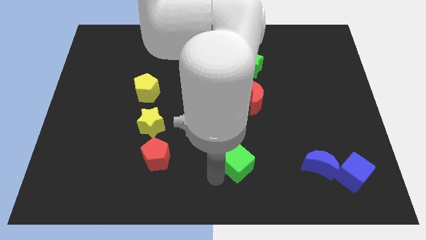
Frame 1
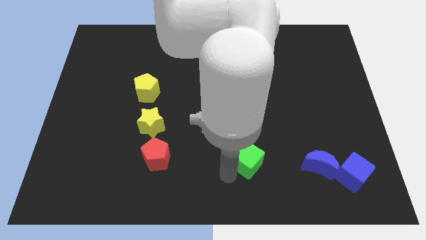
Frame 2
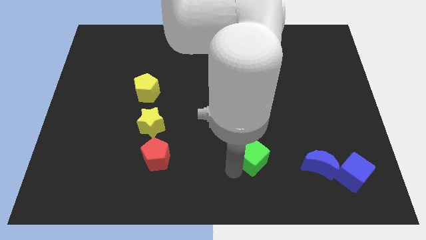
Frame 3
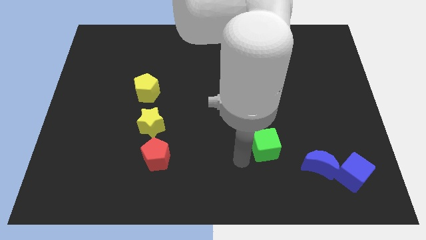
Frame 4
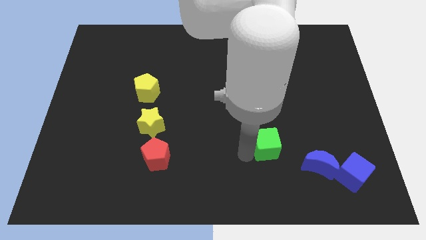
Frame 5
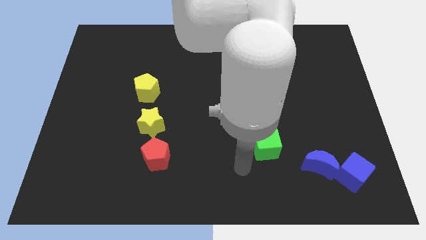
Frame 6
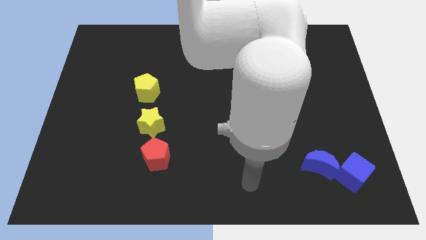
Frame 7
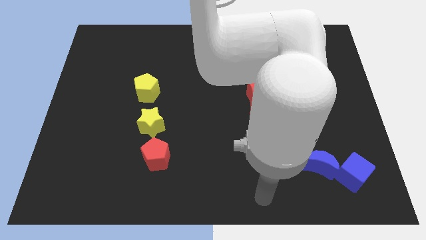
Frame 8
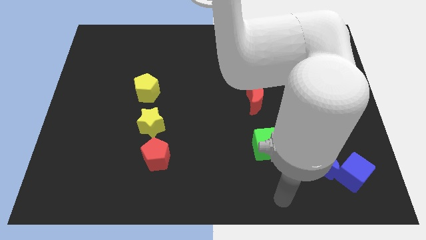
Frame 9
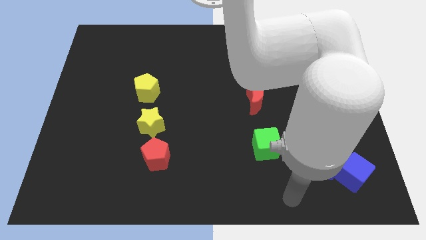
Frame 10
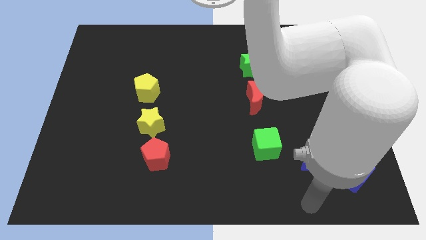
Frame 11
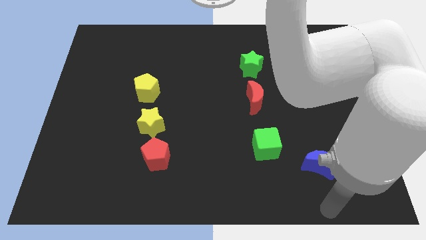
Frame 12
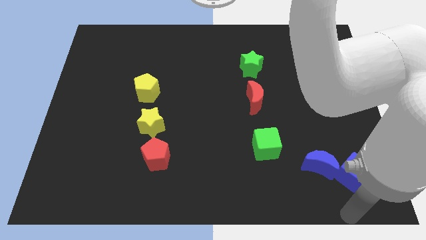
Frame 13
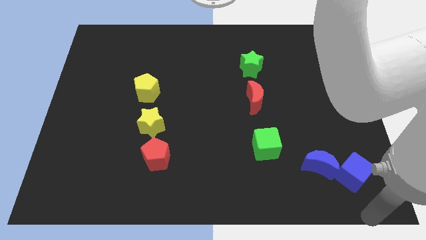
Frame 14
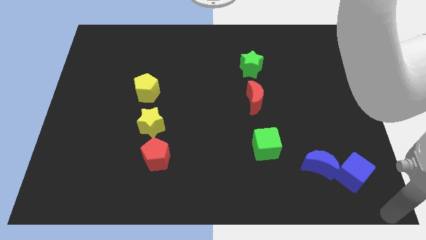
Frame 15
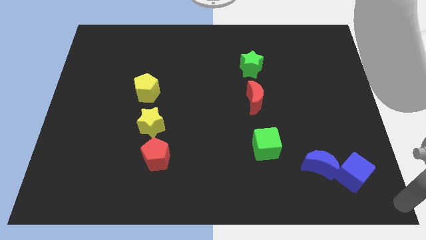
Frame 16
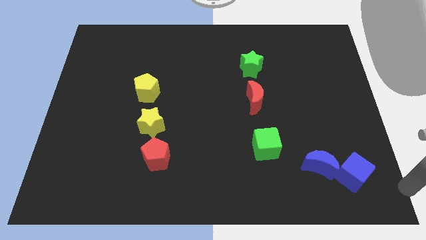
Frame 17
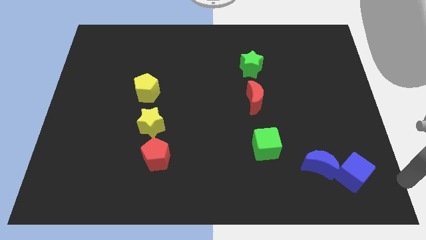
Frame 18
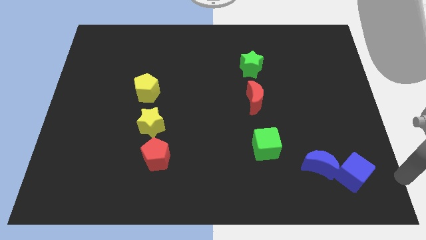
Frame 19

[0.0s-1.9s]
slide up the green cube

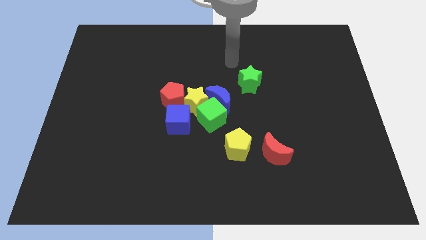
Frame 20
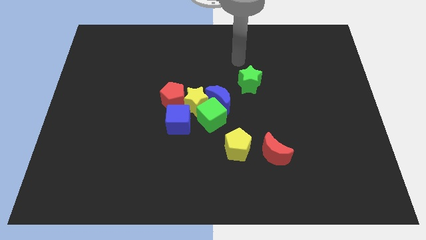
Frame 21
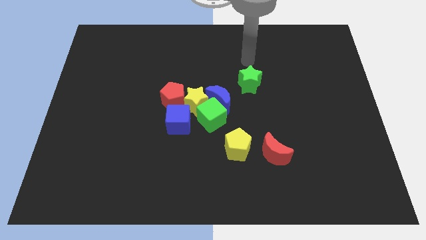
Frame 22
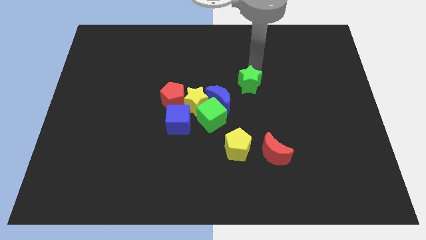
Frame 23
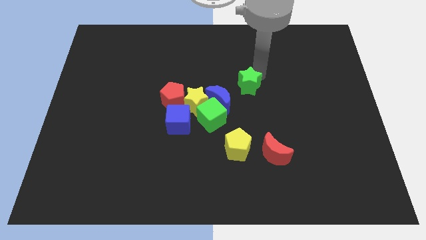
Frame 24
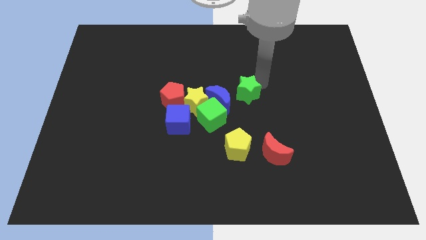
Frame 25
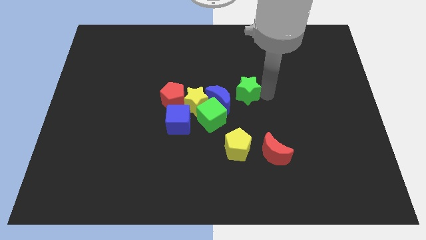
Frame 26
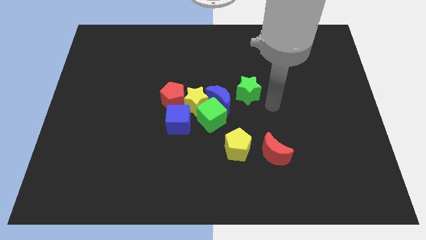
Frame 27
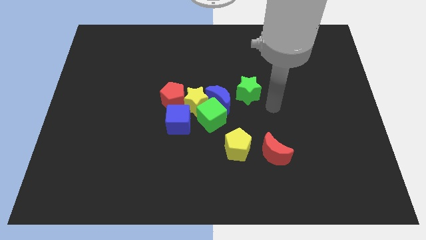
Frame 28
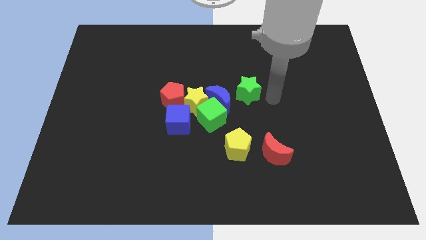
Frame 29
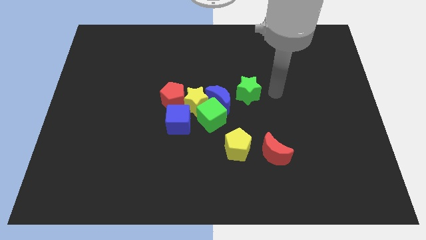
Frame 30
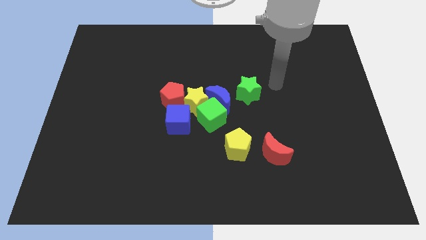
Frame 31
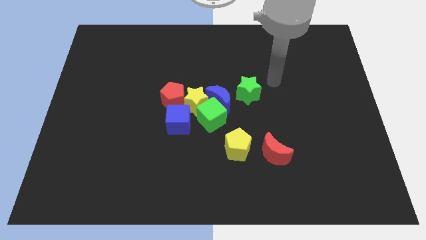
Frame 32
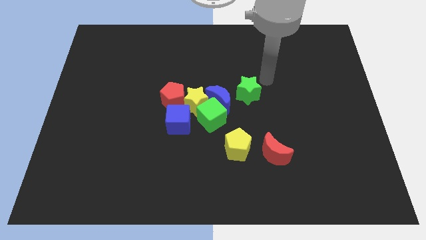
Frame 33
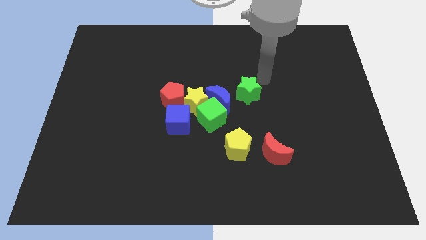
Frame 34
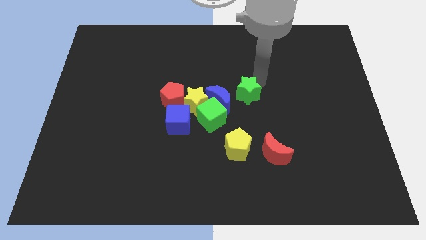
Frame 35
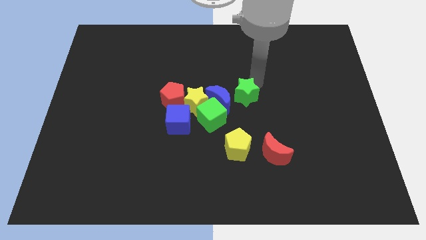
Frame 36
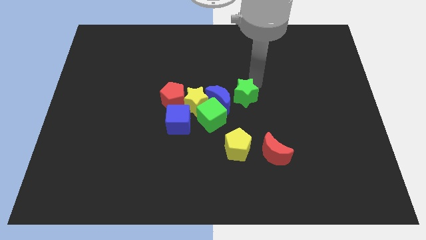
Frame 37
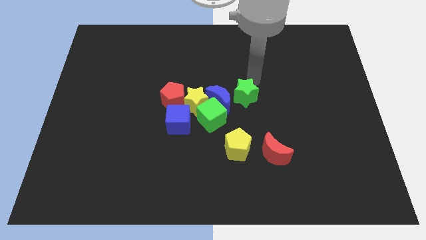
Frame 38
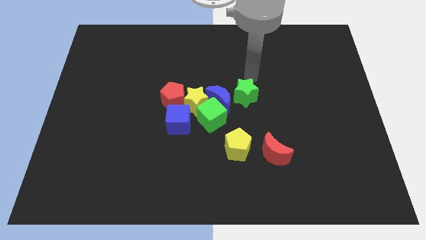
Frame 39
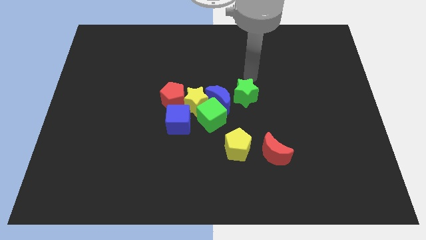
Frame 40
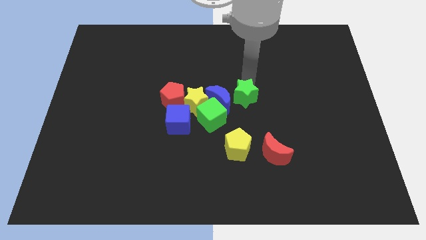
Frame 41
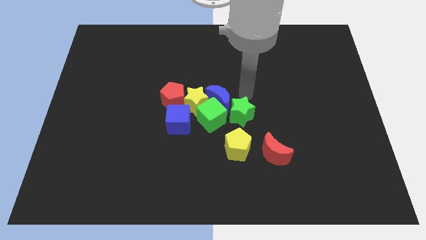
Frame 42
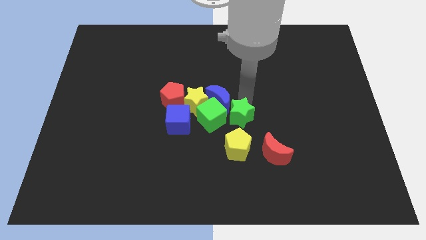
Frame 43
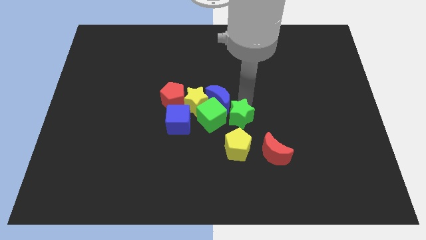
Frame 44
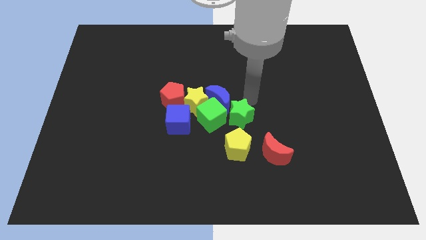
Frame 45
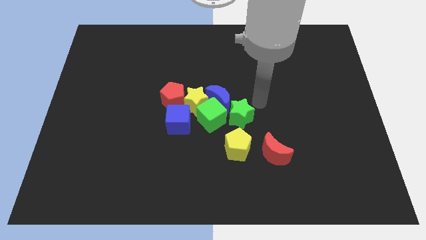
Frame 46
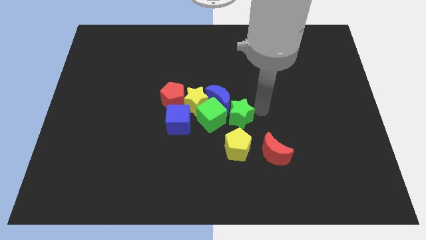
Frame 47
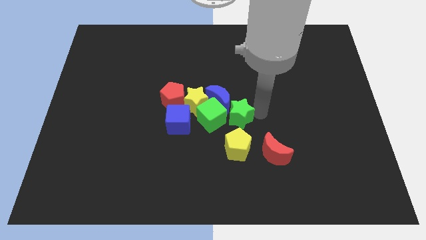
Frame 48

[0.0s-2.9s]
move the green star above the yellow pentagon

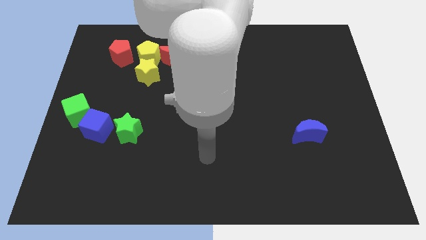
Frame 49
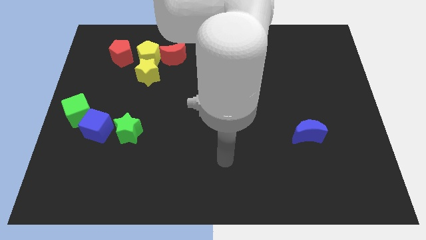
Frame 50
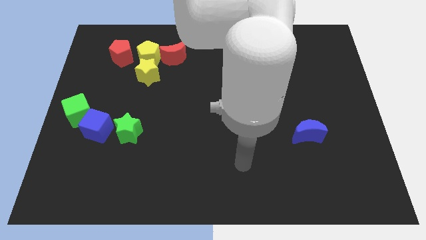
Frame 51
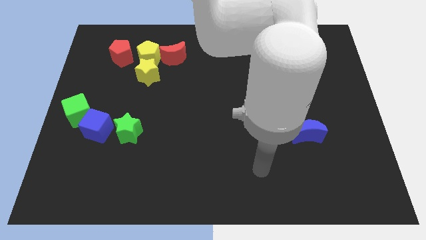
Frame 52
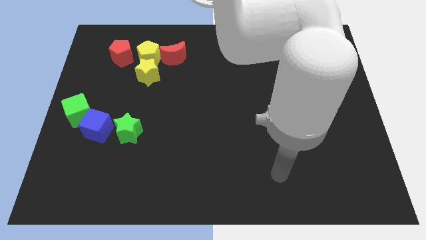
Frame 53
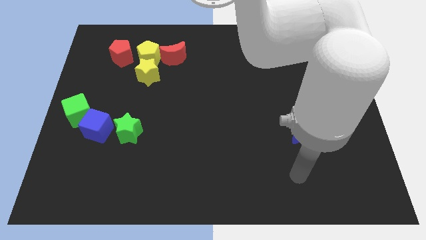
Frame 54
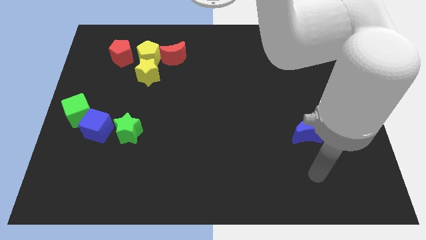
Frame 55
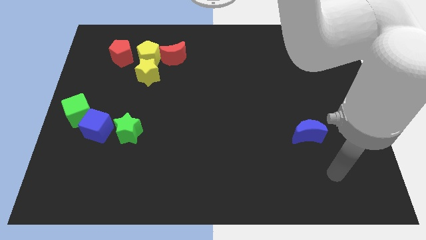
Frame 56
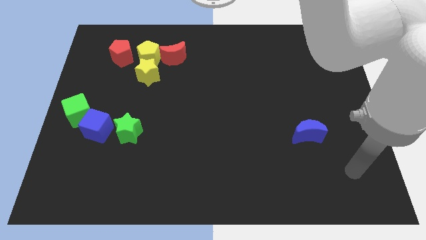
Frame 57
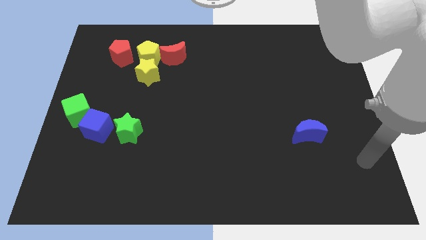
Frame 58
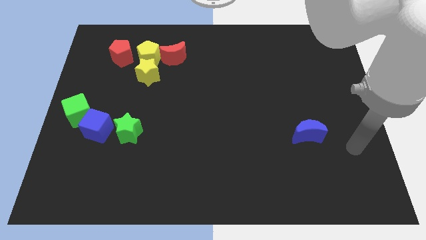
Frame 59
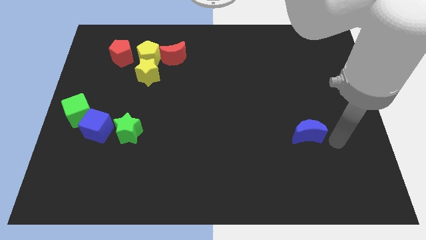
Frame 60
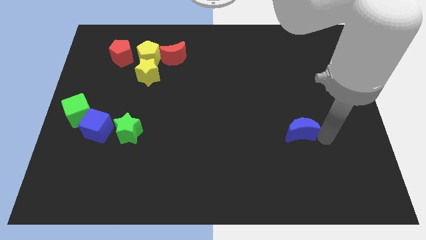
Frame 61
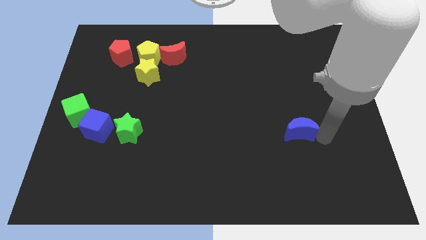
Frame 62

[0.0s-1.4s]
tap the right side of the blue crescent

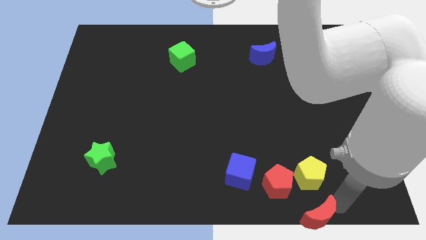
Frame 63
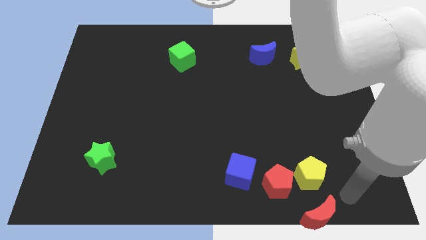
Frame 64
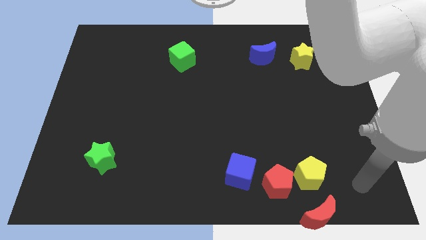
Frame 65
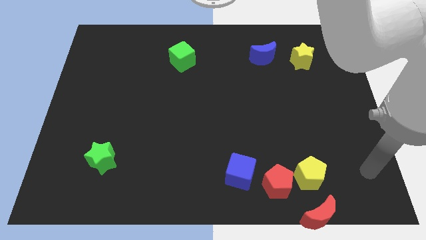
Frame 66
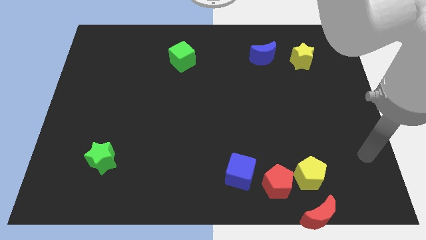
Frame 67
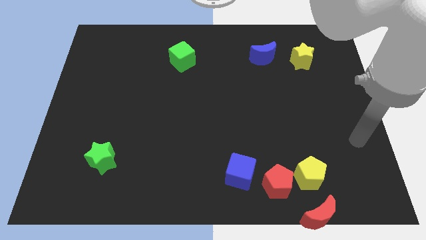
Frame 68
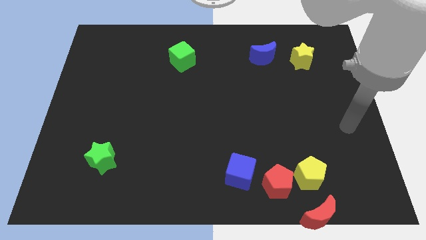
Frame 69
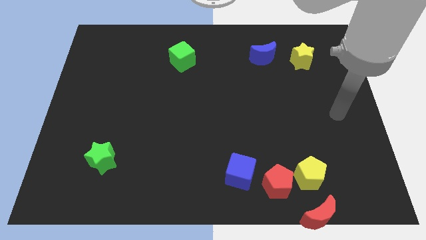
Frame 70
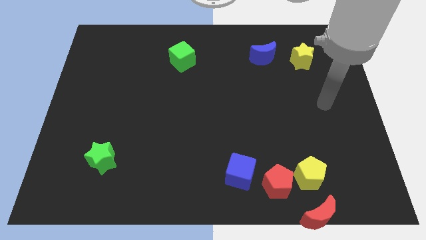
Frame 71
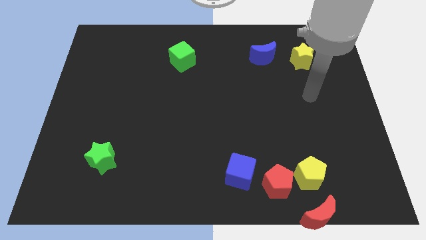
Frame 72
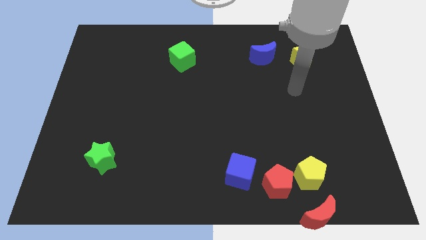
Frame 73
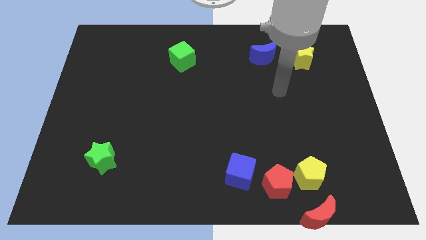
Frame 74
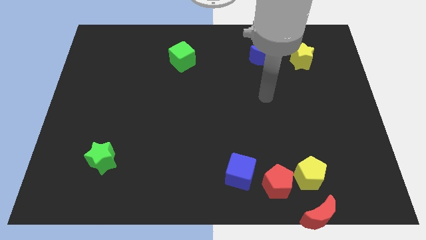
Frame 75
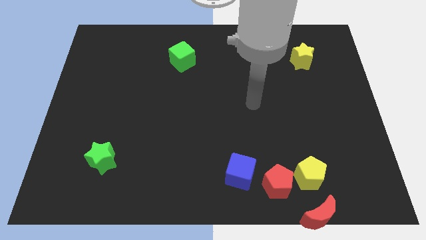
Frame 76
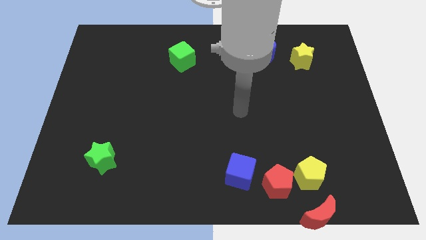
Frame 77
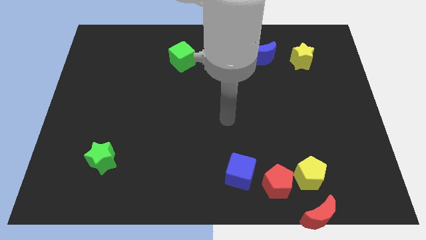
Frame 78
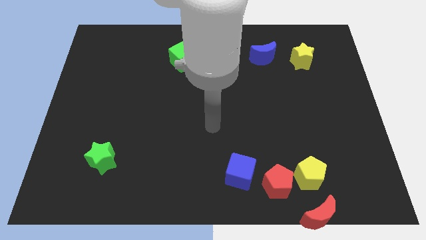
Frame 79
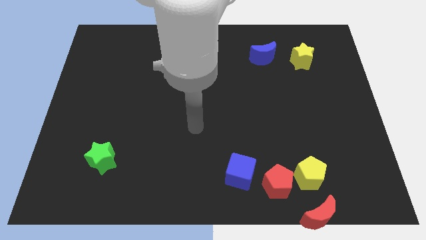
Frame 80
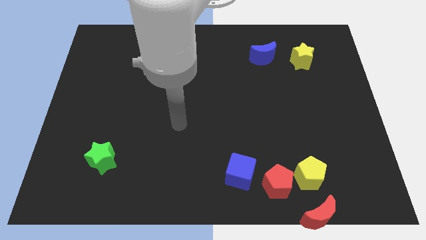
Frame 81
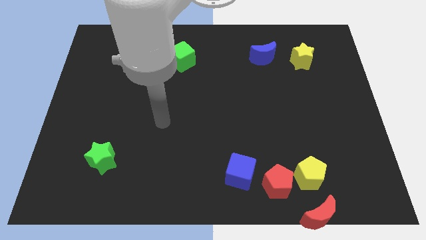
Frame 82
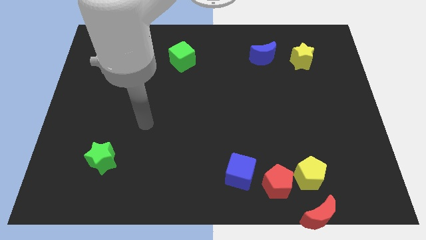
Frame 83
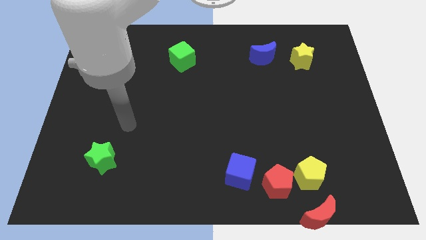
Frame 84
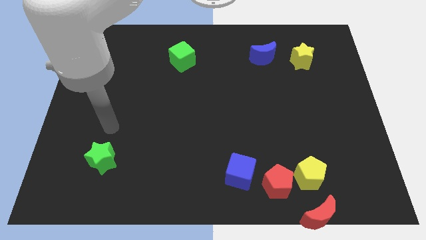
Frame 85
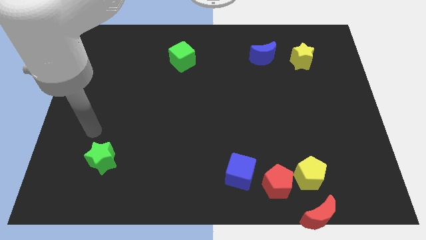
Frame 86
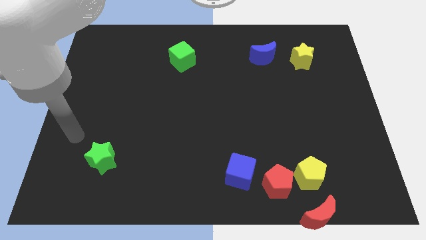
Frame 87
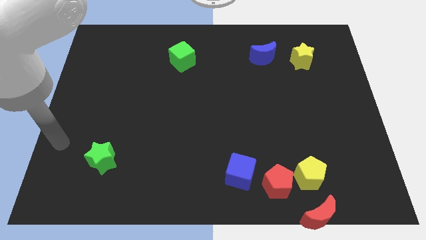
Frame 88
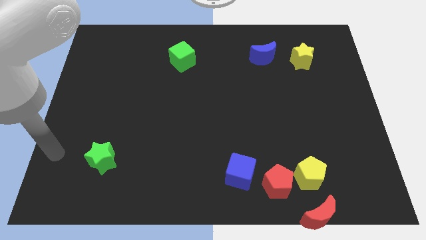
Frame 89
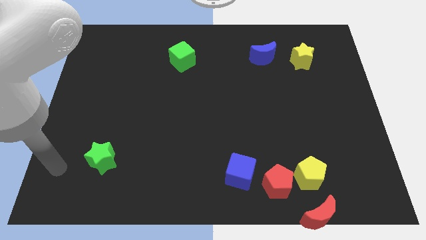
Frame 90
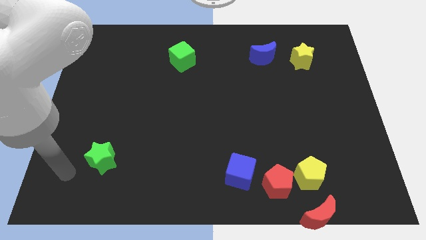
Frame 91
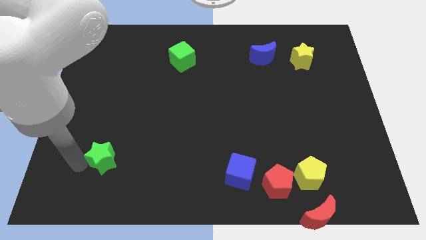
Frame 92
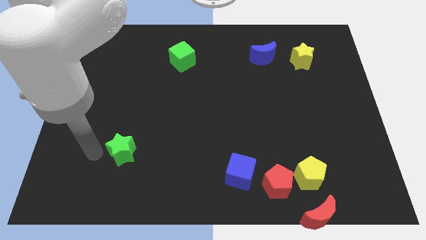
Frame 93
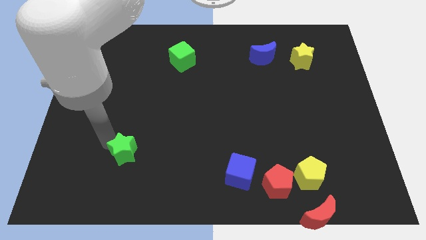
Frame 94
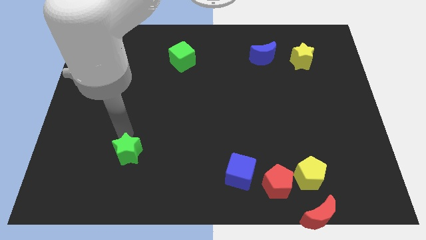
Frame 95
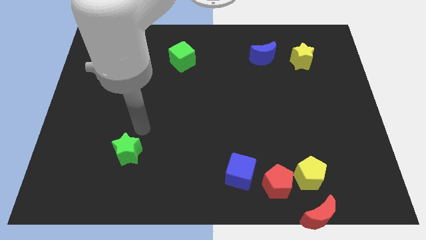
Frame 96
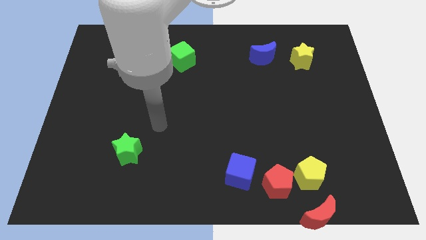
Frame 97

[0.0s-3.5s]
slide the green star towards the right side of the board
